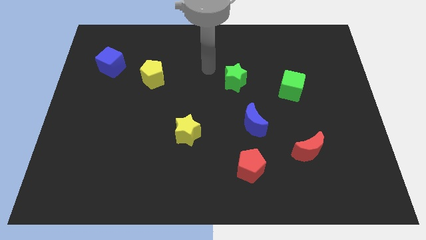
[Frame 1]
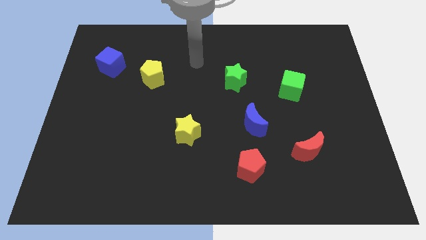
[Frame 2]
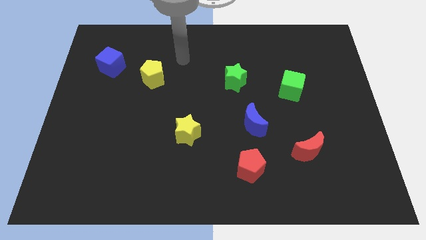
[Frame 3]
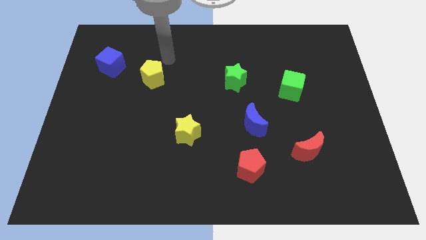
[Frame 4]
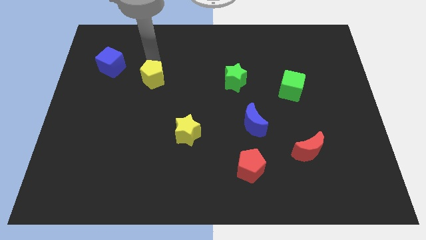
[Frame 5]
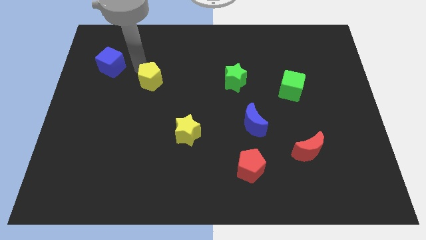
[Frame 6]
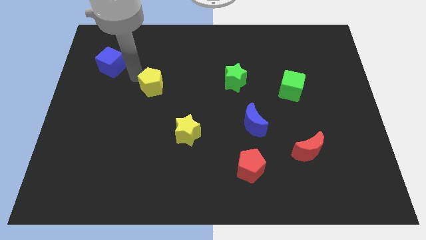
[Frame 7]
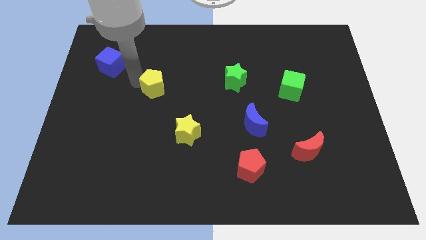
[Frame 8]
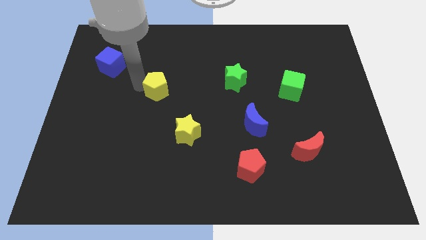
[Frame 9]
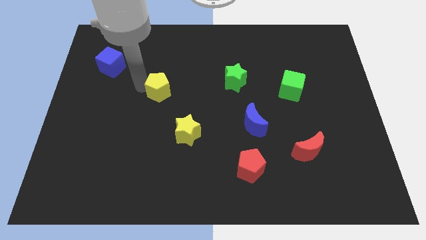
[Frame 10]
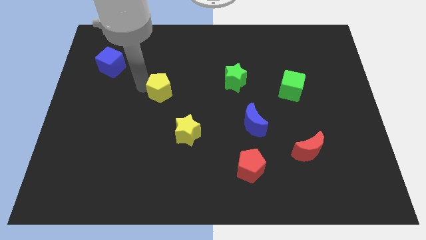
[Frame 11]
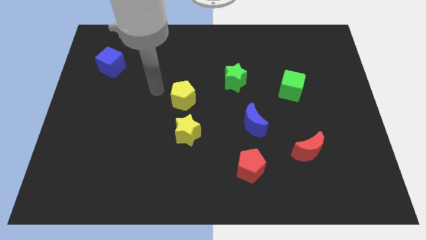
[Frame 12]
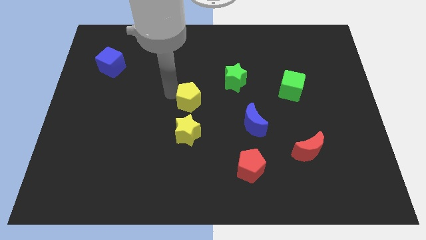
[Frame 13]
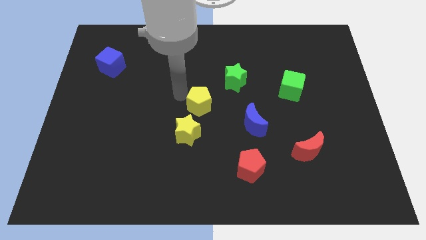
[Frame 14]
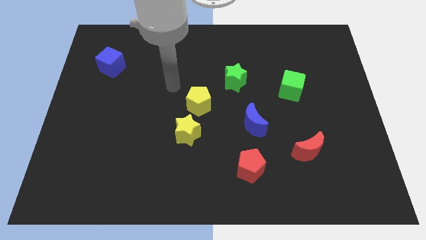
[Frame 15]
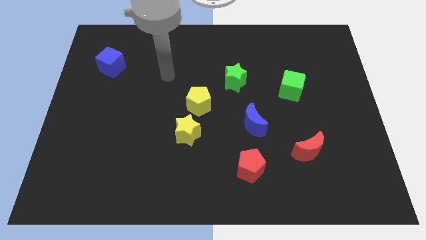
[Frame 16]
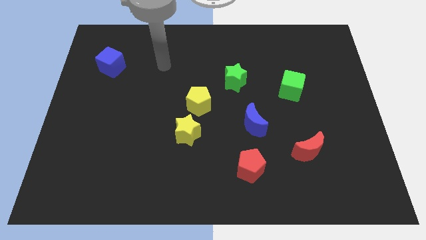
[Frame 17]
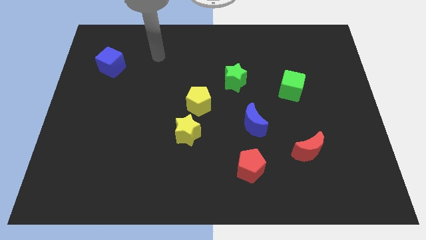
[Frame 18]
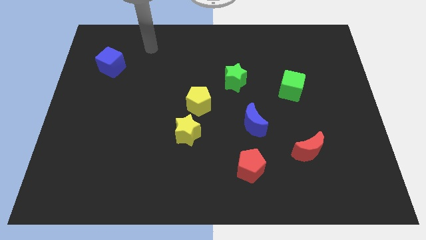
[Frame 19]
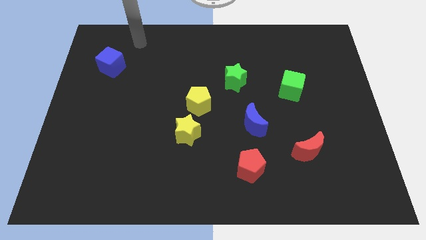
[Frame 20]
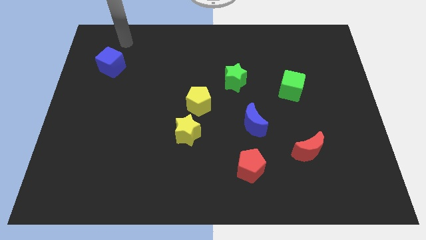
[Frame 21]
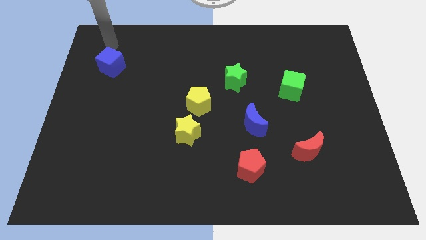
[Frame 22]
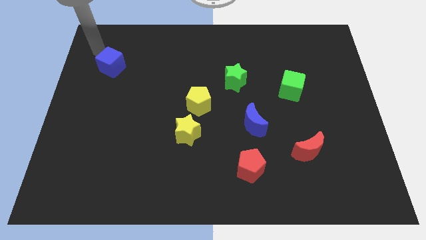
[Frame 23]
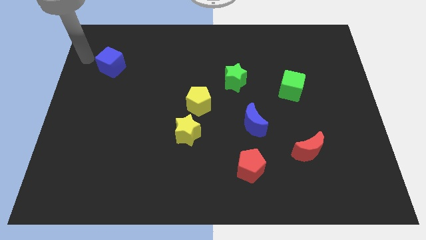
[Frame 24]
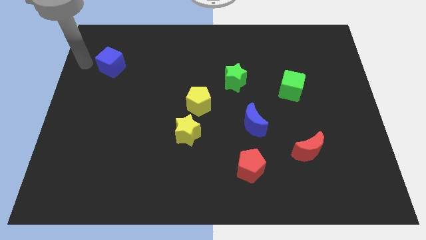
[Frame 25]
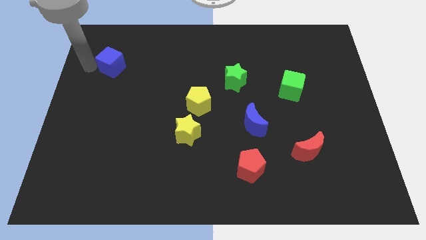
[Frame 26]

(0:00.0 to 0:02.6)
move the yellow pentagon above the yellow star

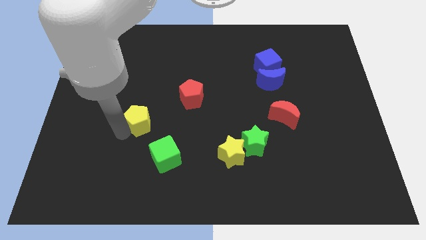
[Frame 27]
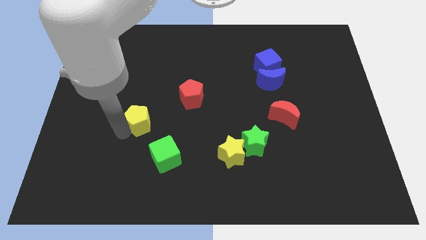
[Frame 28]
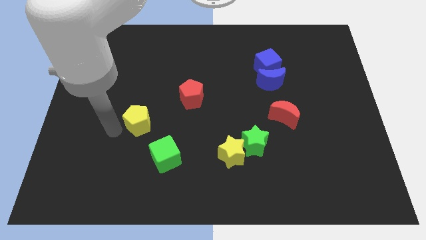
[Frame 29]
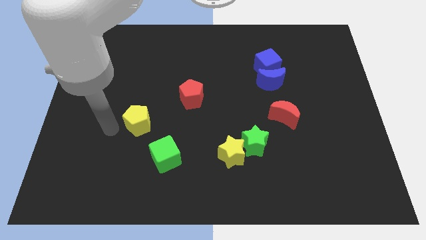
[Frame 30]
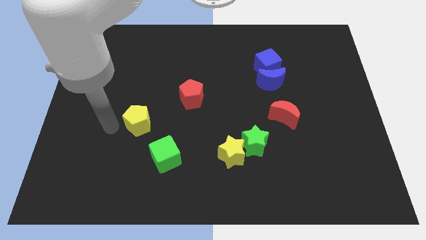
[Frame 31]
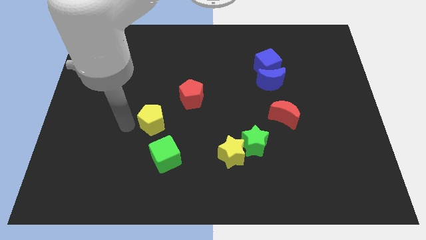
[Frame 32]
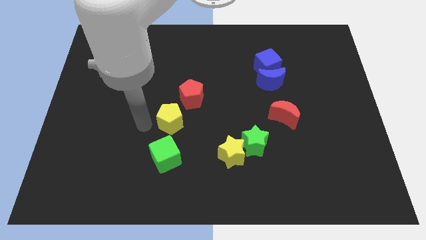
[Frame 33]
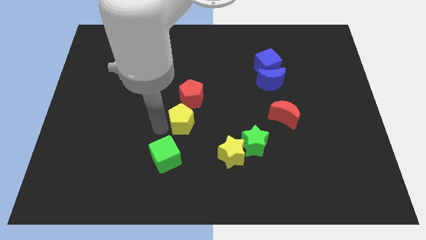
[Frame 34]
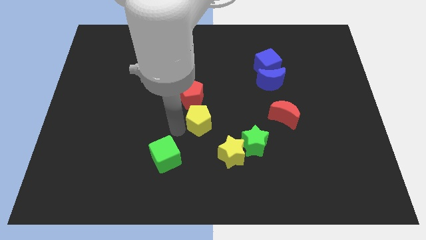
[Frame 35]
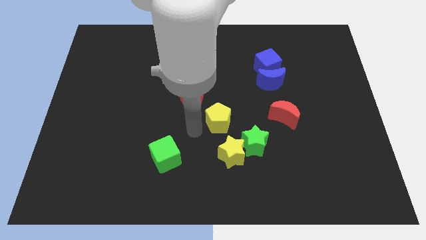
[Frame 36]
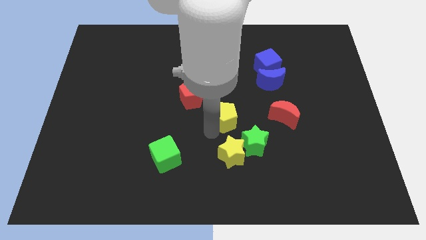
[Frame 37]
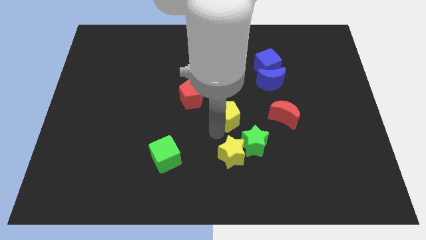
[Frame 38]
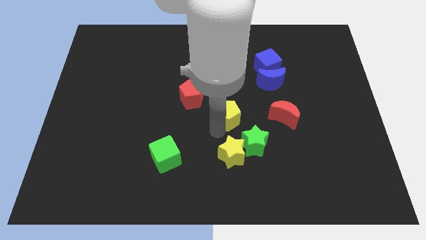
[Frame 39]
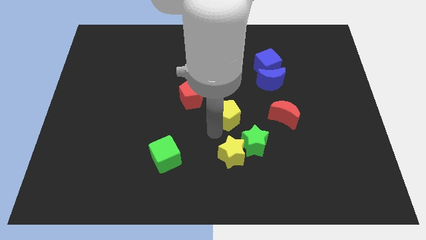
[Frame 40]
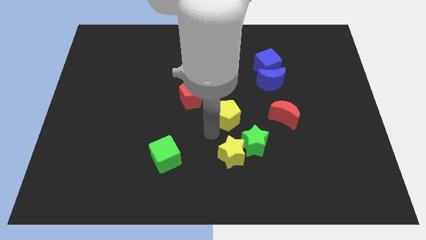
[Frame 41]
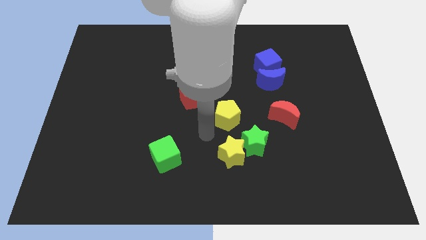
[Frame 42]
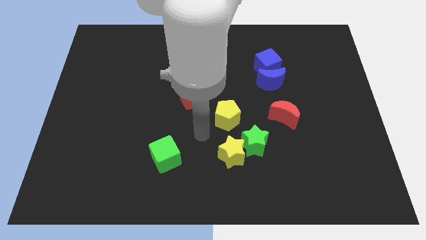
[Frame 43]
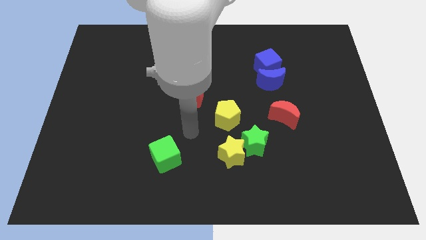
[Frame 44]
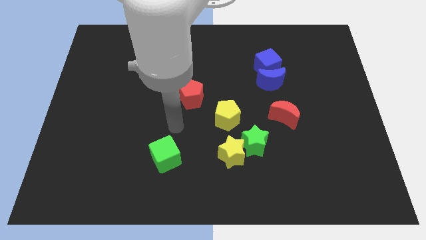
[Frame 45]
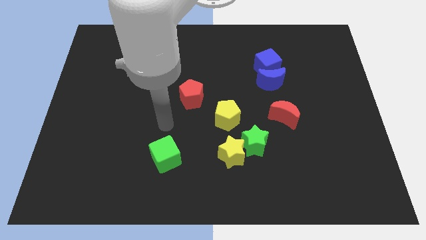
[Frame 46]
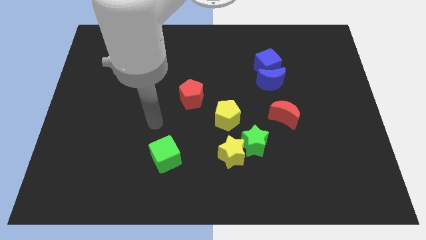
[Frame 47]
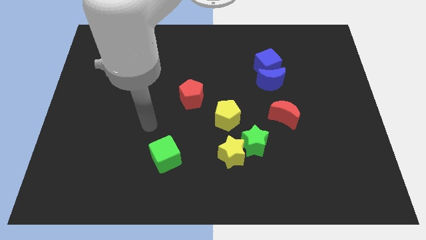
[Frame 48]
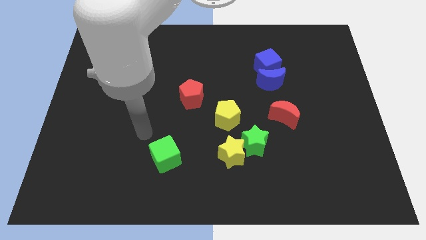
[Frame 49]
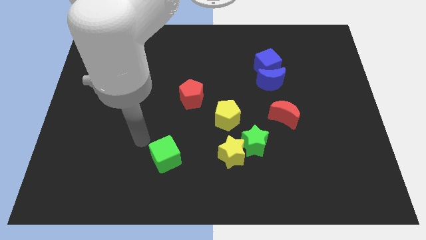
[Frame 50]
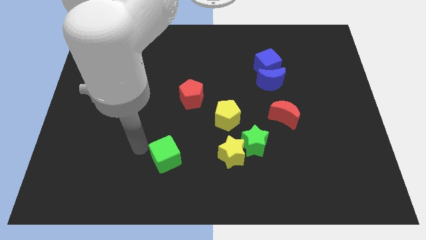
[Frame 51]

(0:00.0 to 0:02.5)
place yellow pentagon above yellow star

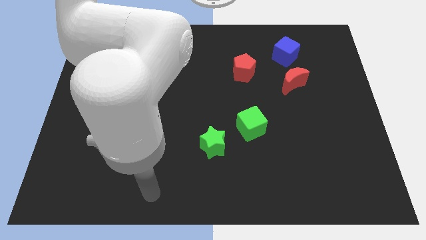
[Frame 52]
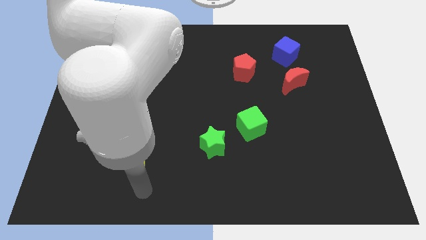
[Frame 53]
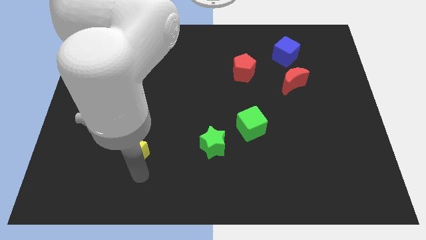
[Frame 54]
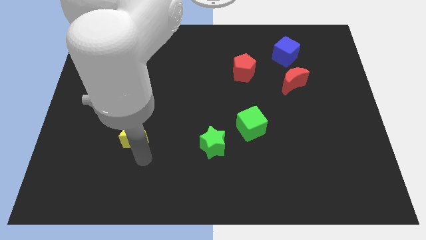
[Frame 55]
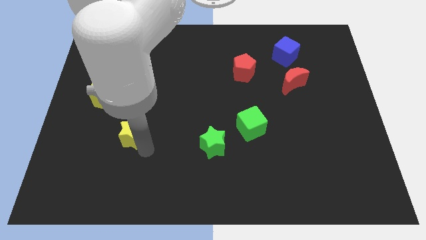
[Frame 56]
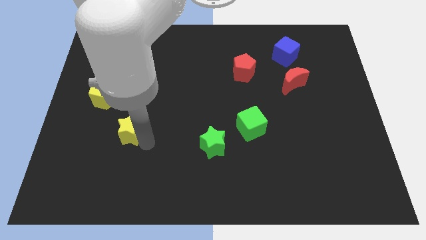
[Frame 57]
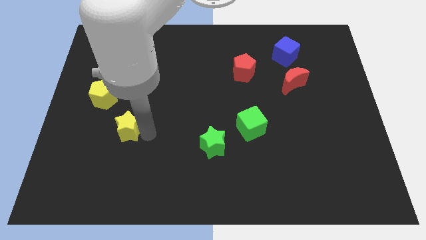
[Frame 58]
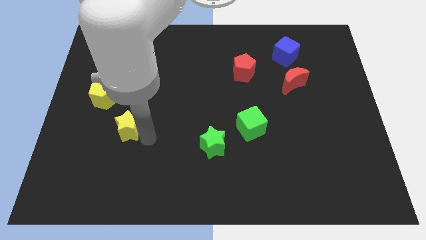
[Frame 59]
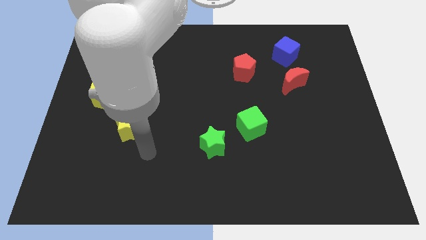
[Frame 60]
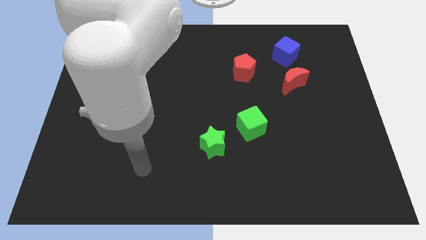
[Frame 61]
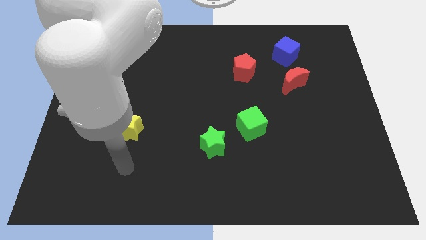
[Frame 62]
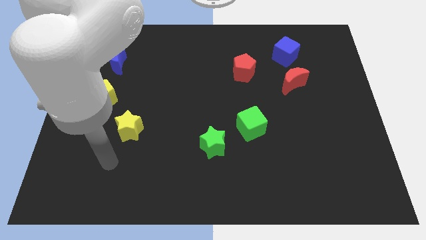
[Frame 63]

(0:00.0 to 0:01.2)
slide the yellow star towards the yellow pentagon

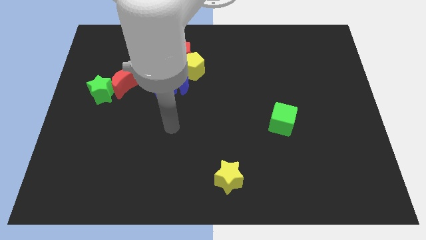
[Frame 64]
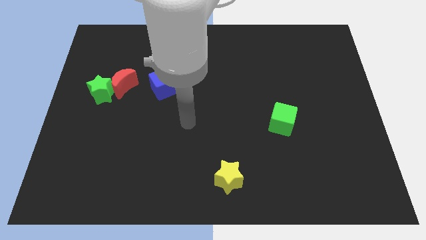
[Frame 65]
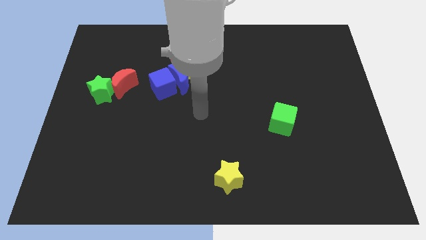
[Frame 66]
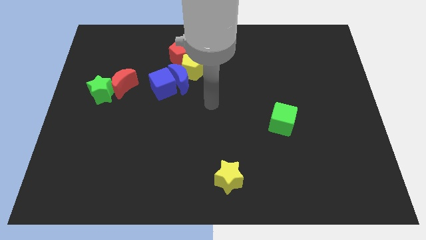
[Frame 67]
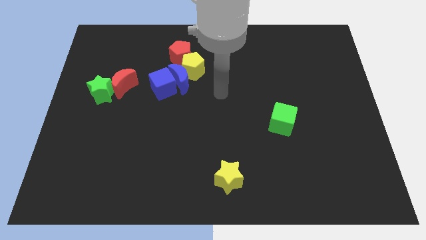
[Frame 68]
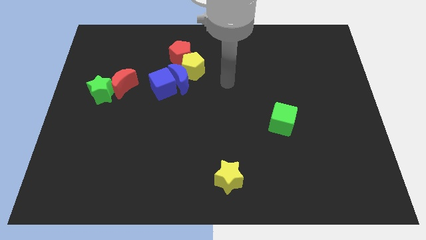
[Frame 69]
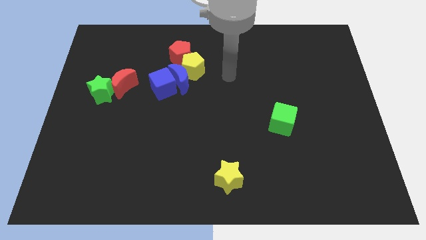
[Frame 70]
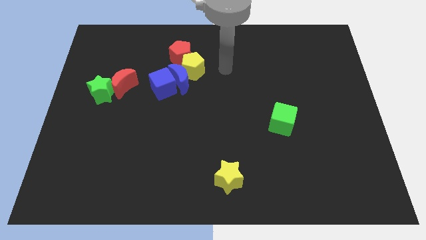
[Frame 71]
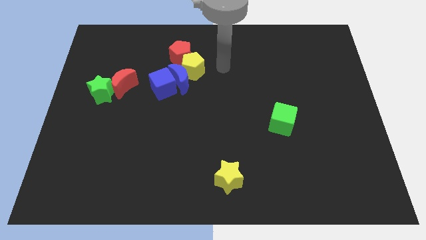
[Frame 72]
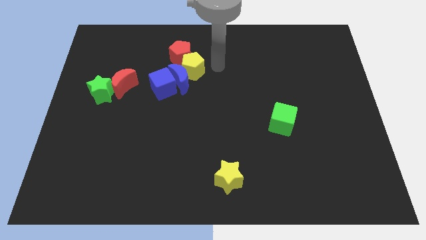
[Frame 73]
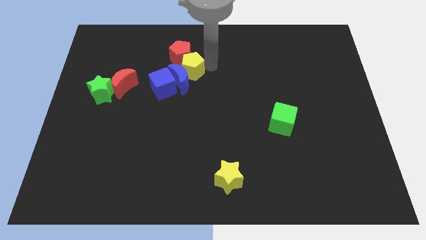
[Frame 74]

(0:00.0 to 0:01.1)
point your arm at the right of the yellow pentagon

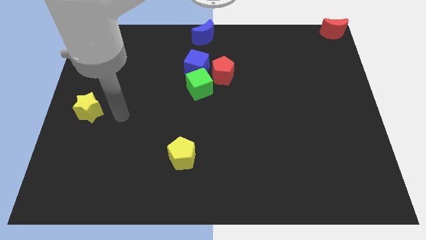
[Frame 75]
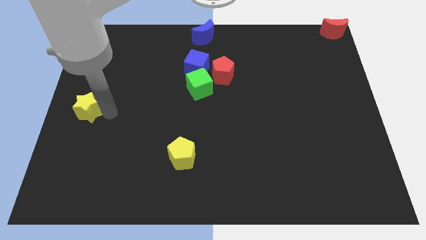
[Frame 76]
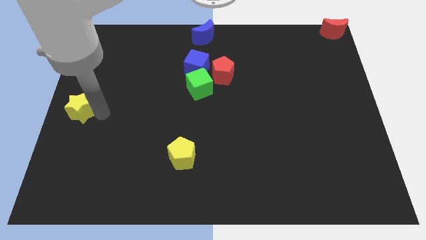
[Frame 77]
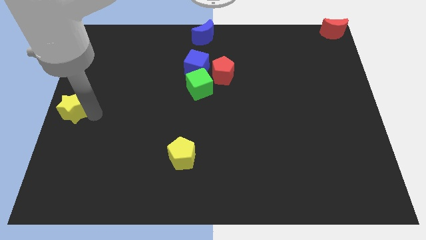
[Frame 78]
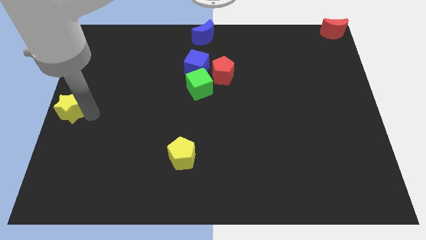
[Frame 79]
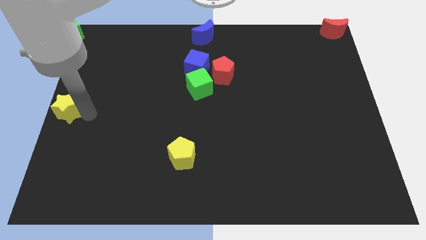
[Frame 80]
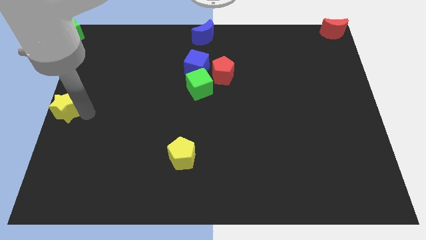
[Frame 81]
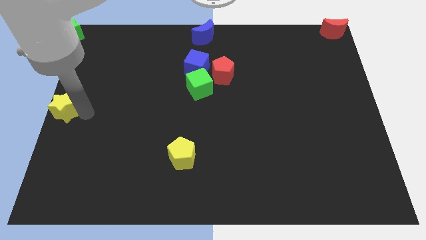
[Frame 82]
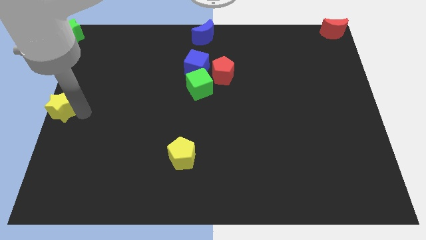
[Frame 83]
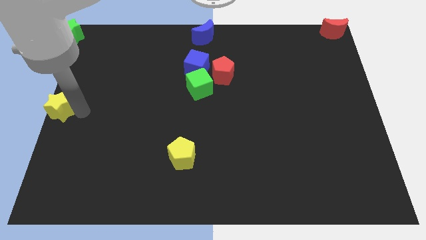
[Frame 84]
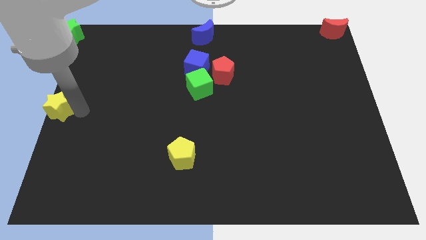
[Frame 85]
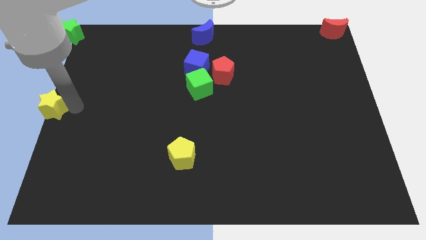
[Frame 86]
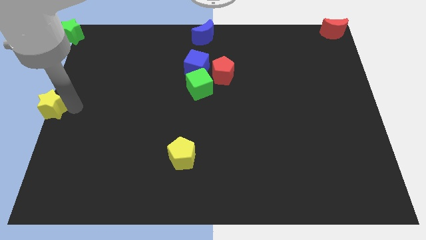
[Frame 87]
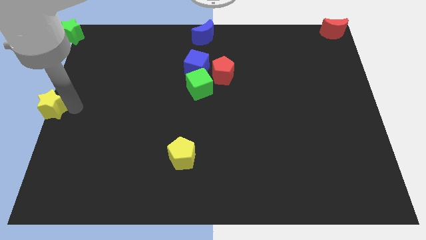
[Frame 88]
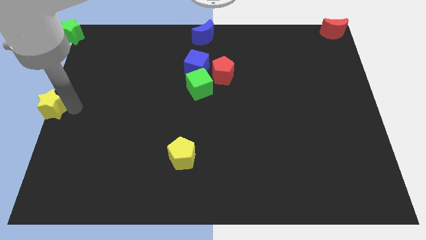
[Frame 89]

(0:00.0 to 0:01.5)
move the yellow star to the center left of the board
